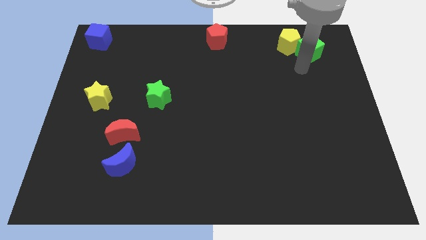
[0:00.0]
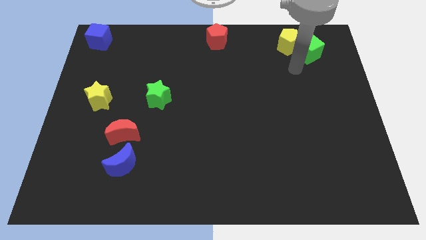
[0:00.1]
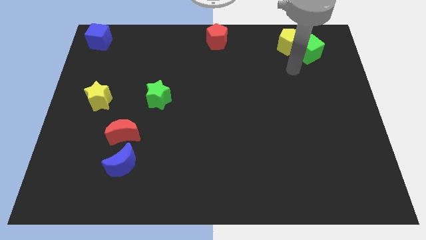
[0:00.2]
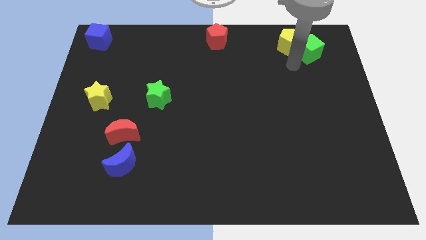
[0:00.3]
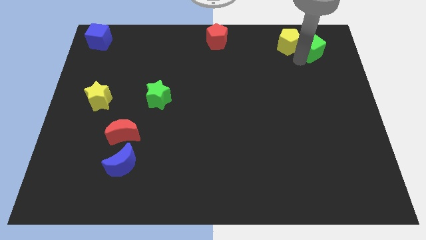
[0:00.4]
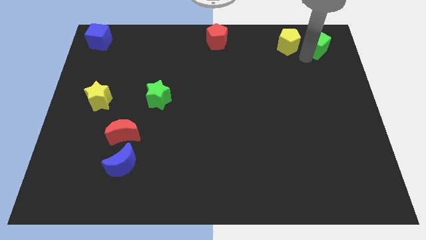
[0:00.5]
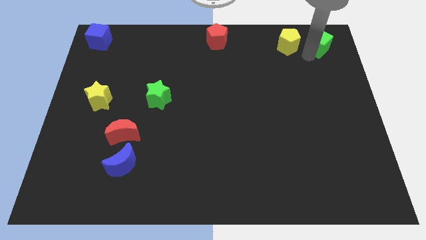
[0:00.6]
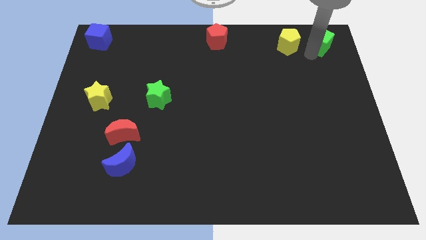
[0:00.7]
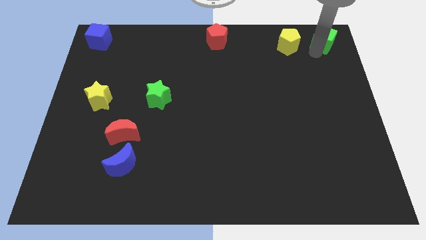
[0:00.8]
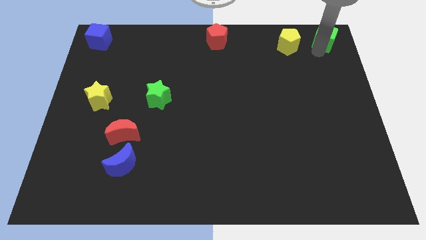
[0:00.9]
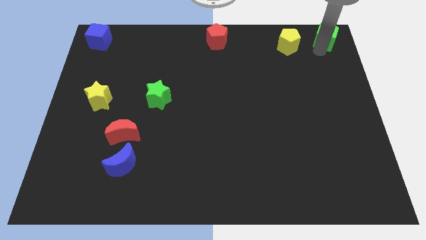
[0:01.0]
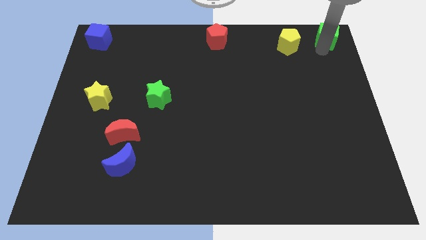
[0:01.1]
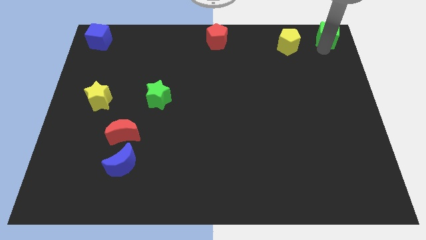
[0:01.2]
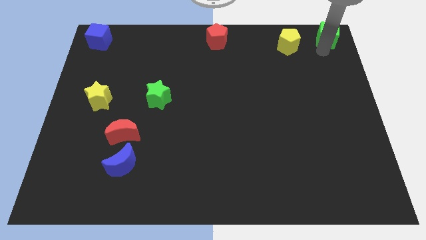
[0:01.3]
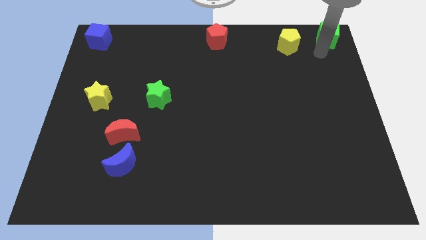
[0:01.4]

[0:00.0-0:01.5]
place green cube to the top right corner of the board

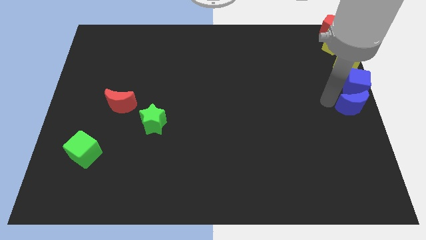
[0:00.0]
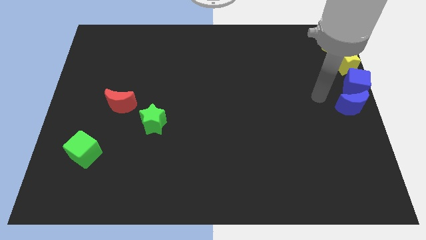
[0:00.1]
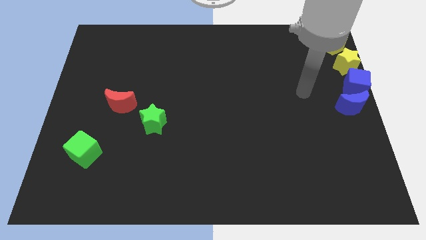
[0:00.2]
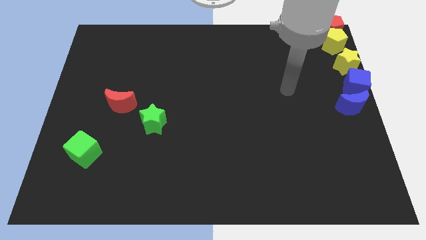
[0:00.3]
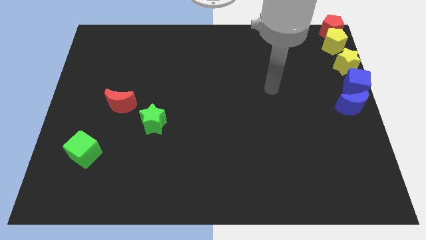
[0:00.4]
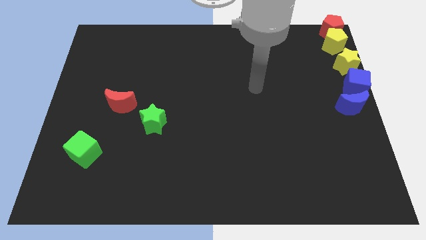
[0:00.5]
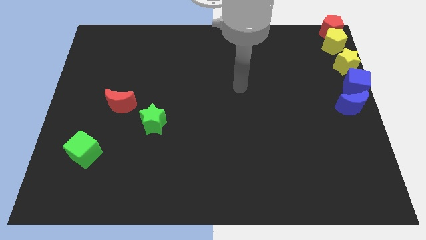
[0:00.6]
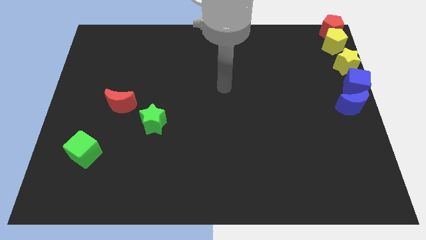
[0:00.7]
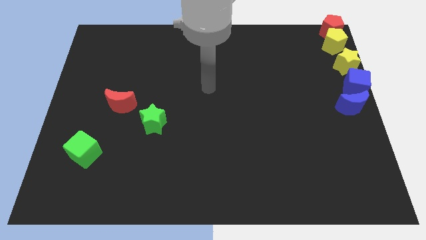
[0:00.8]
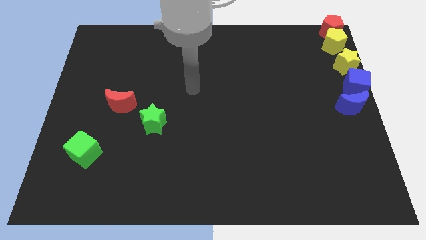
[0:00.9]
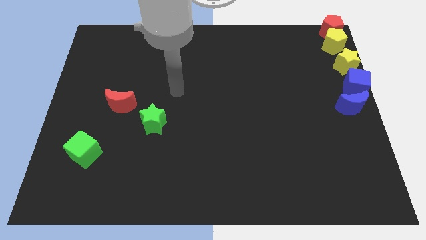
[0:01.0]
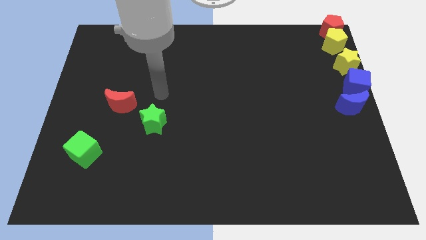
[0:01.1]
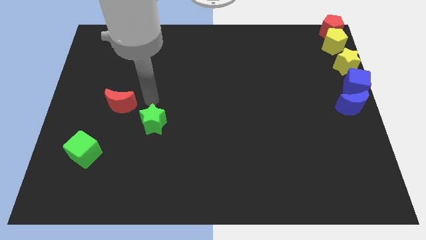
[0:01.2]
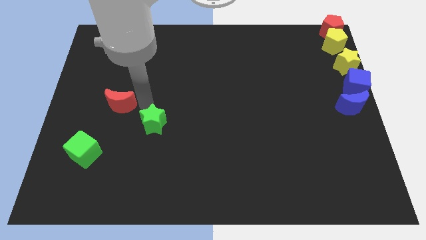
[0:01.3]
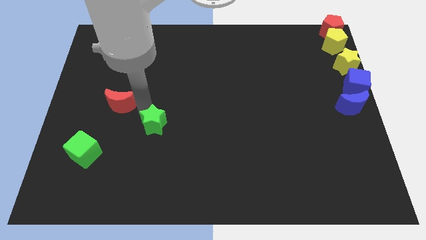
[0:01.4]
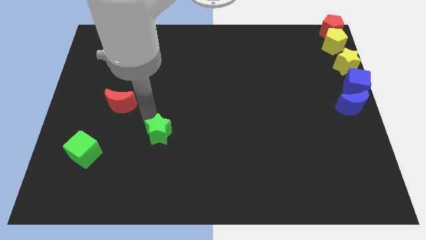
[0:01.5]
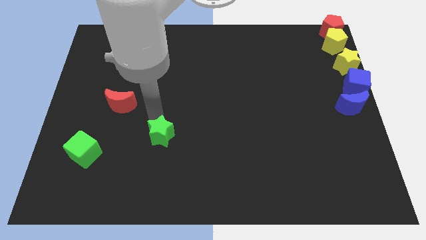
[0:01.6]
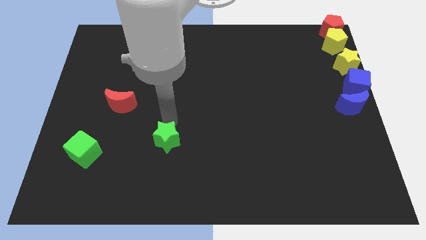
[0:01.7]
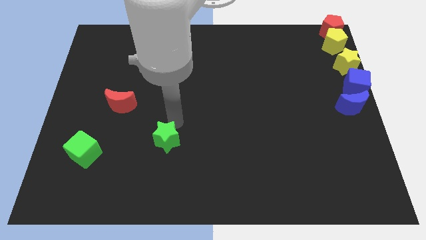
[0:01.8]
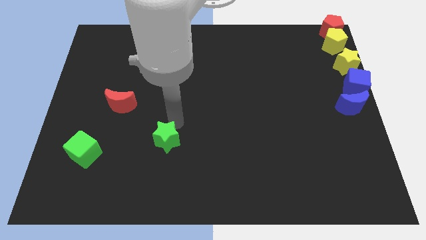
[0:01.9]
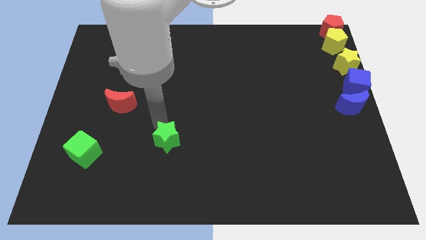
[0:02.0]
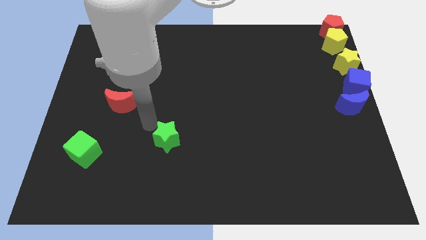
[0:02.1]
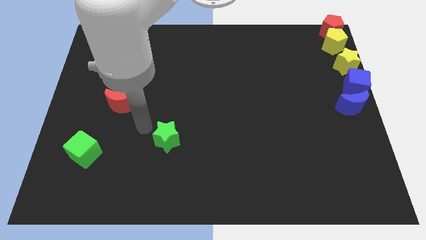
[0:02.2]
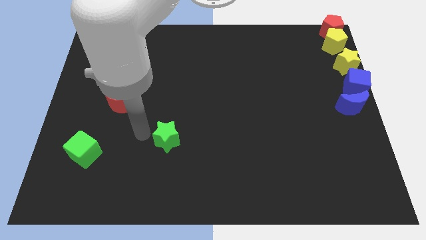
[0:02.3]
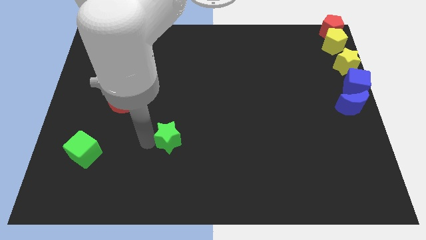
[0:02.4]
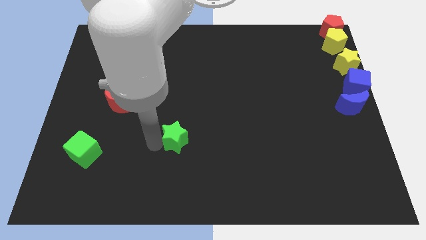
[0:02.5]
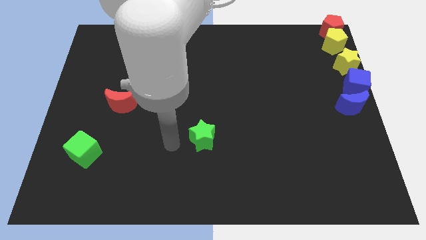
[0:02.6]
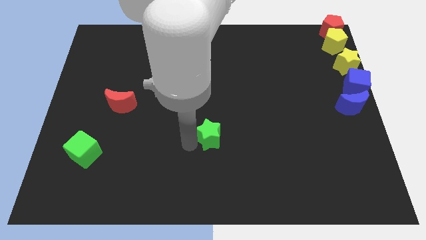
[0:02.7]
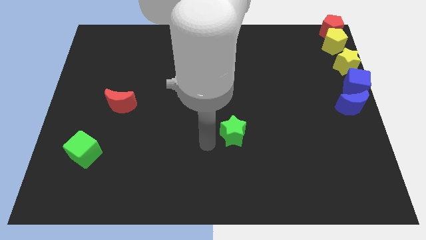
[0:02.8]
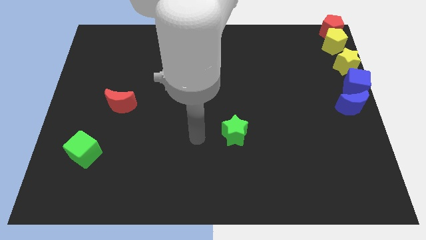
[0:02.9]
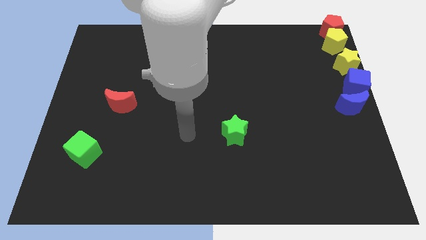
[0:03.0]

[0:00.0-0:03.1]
move the green star to the right side

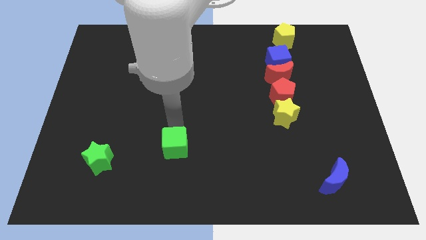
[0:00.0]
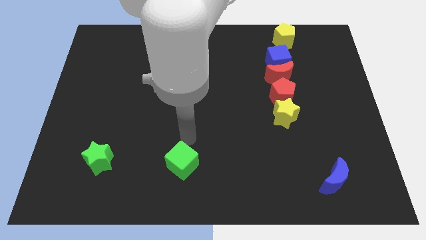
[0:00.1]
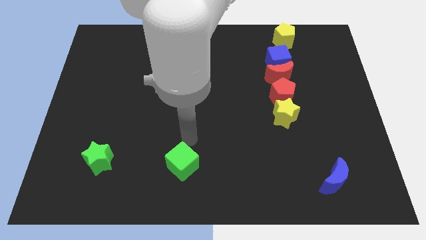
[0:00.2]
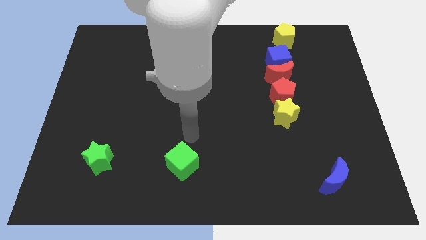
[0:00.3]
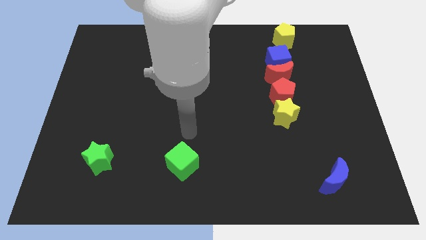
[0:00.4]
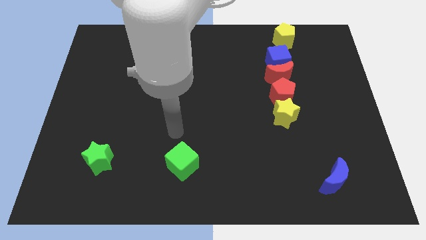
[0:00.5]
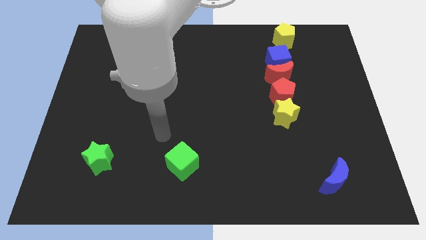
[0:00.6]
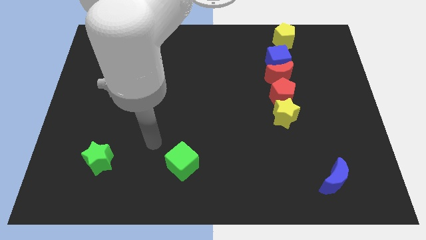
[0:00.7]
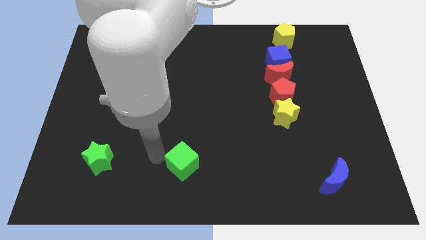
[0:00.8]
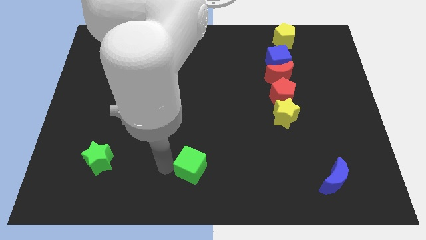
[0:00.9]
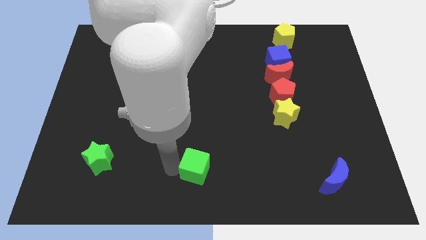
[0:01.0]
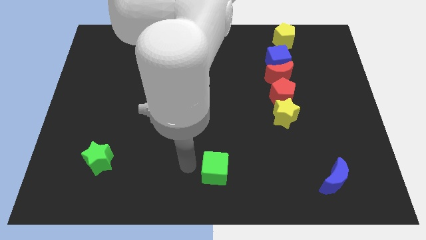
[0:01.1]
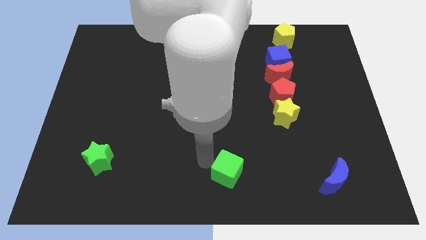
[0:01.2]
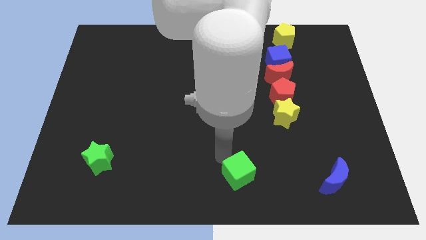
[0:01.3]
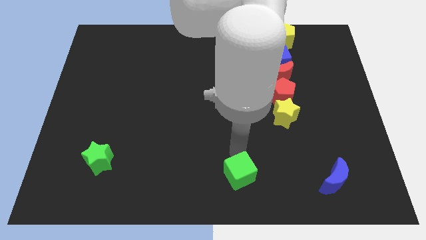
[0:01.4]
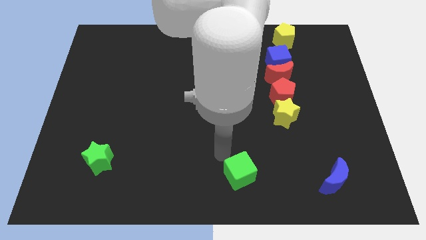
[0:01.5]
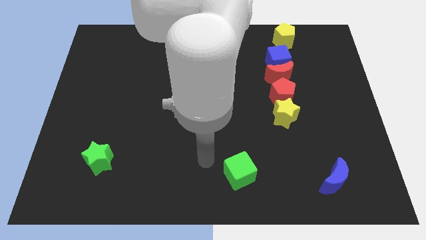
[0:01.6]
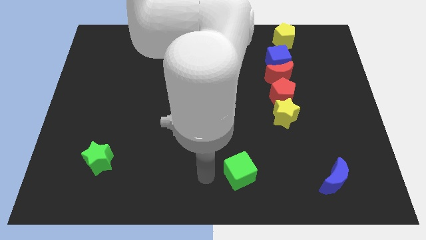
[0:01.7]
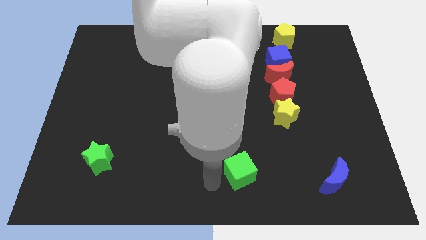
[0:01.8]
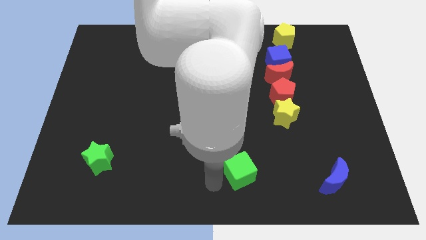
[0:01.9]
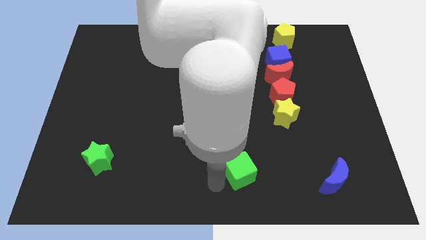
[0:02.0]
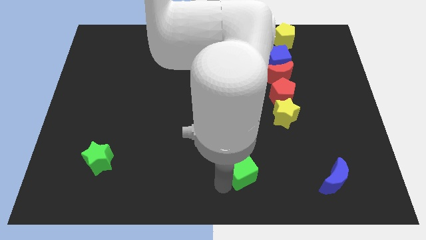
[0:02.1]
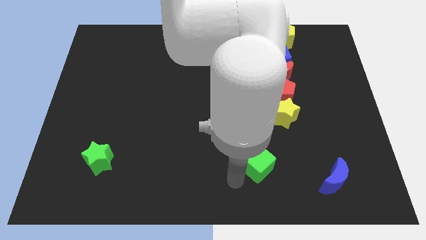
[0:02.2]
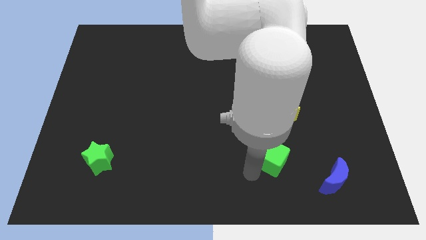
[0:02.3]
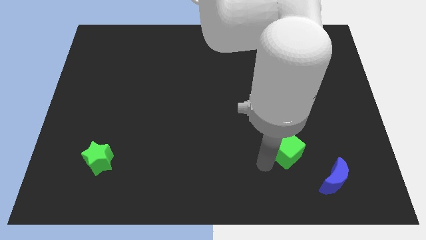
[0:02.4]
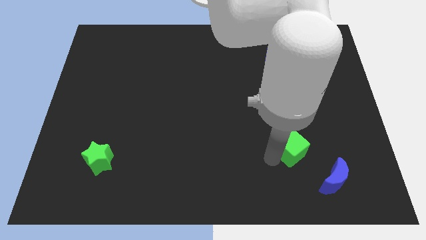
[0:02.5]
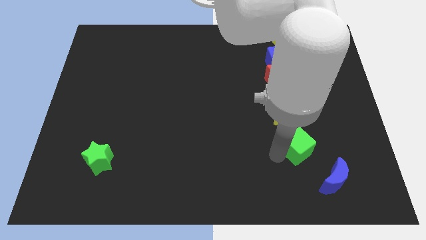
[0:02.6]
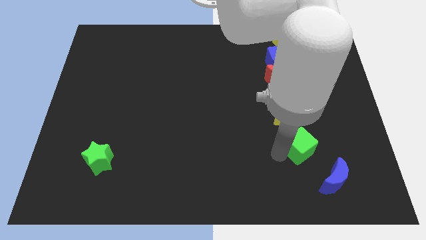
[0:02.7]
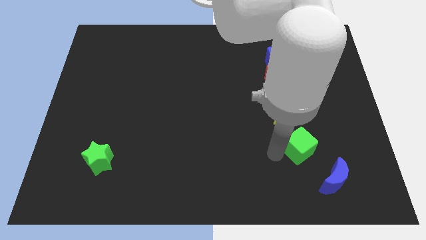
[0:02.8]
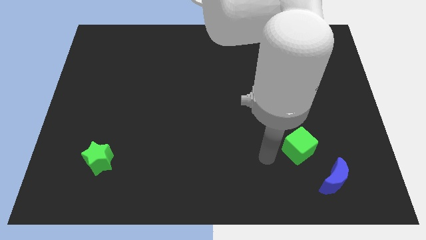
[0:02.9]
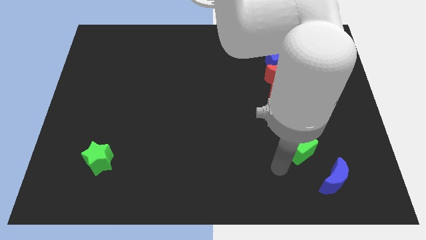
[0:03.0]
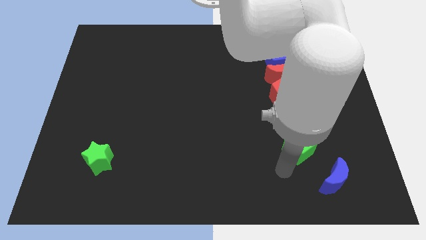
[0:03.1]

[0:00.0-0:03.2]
place the green cube below the yellow star

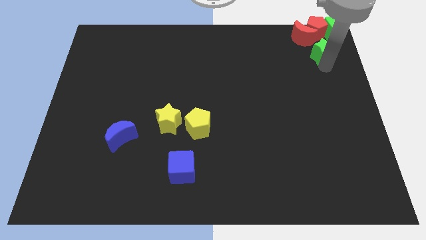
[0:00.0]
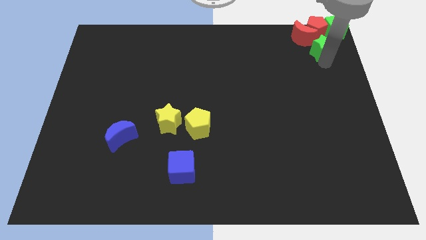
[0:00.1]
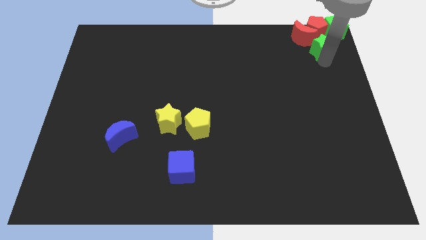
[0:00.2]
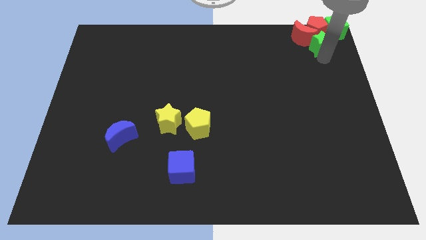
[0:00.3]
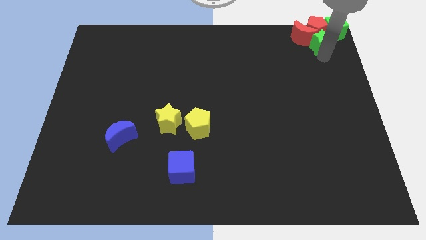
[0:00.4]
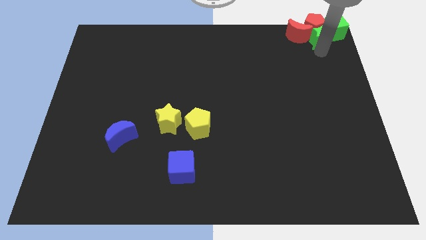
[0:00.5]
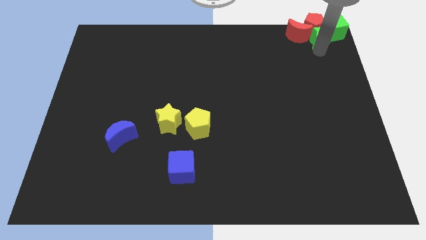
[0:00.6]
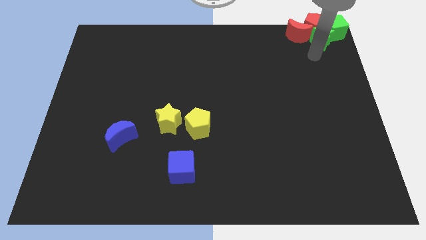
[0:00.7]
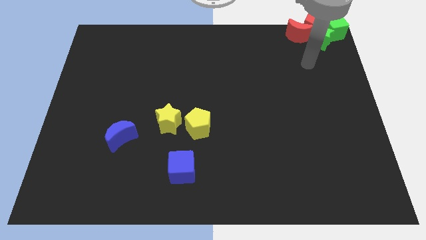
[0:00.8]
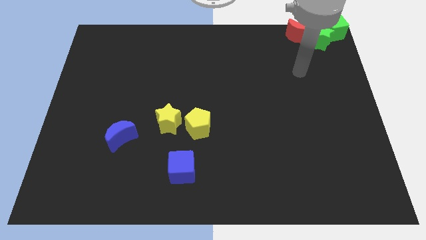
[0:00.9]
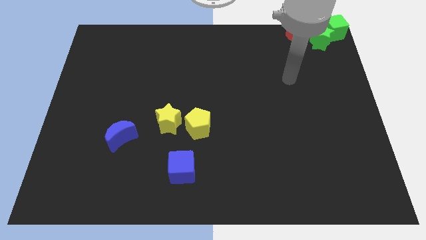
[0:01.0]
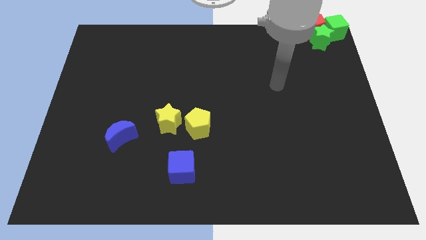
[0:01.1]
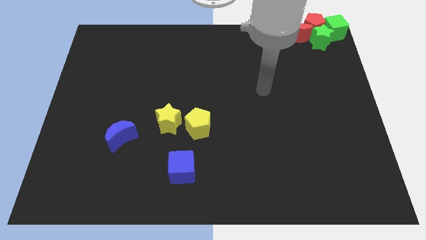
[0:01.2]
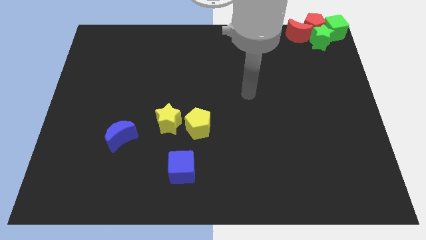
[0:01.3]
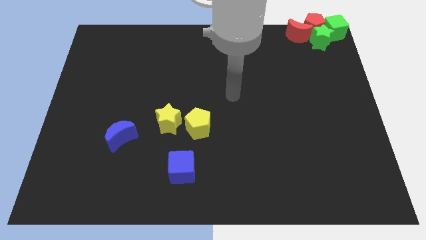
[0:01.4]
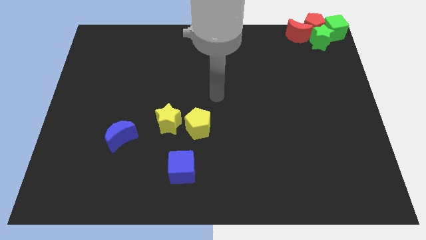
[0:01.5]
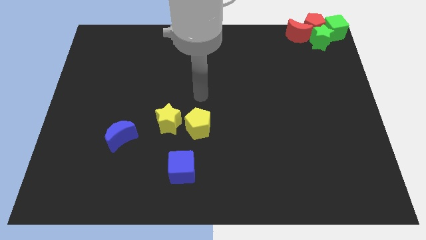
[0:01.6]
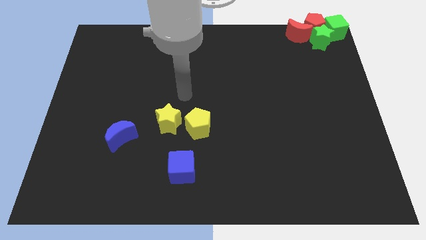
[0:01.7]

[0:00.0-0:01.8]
push the green star into the red pentagon
